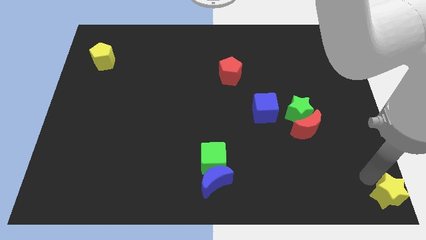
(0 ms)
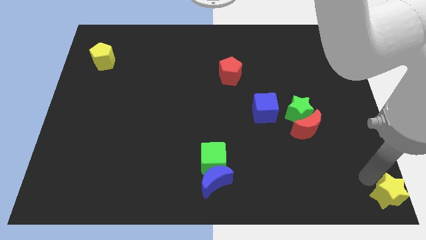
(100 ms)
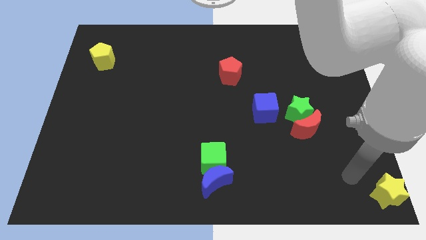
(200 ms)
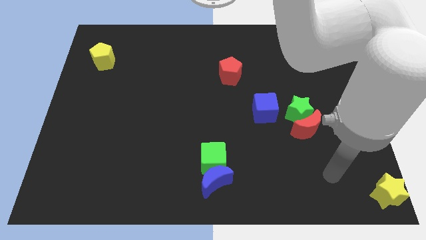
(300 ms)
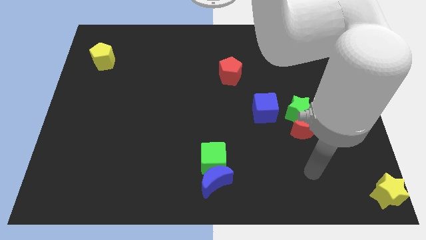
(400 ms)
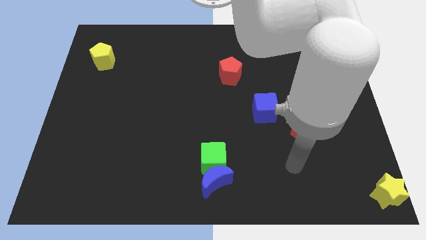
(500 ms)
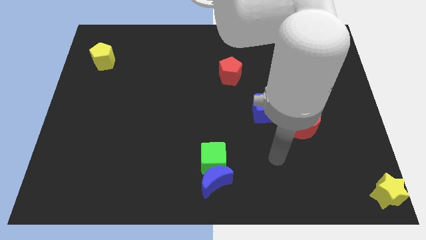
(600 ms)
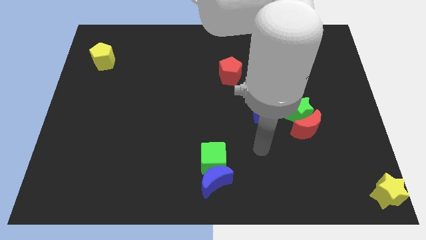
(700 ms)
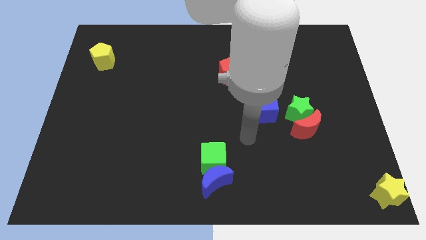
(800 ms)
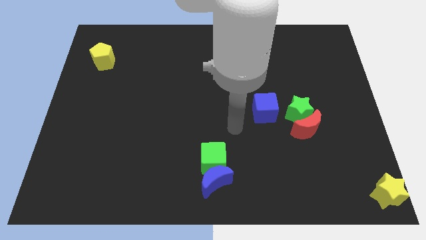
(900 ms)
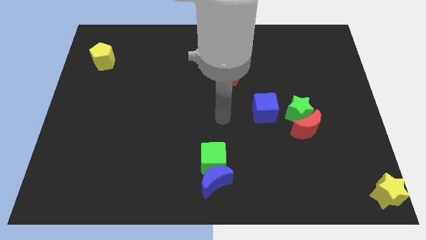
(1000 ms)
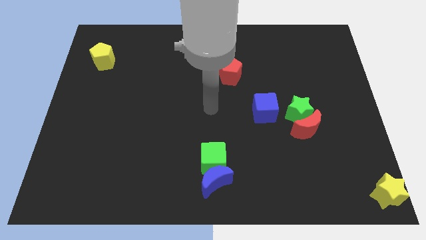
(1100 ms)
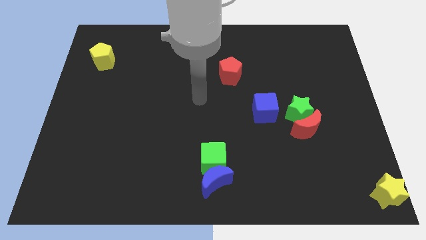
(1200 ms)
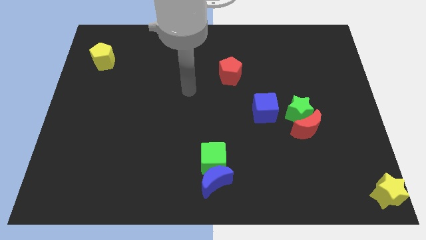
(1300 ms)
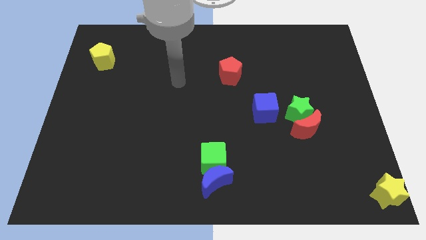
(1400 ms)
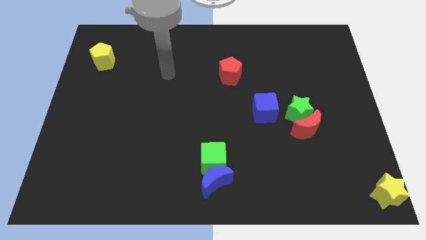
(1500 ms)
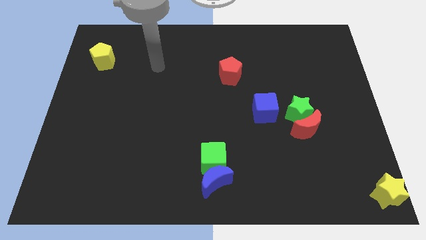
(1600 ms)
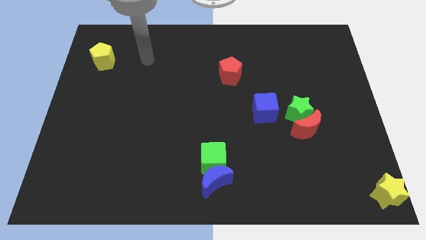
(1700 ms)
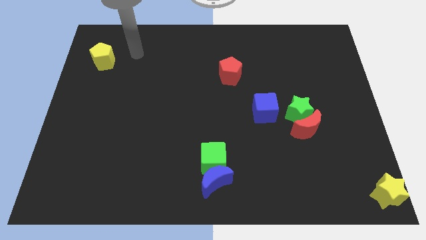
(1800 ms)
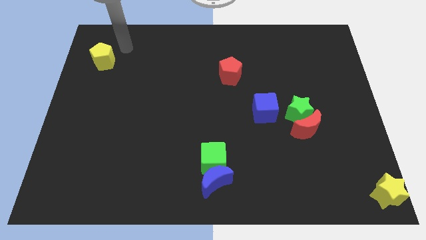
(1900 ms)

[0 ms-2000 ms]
move your arm away from the yellow star

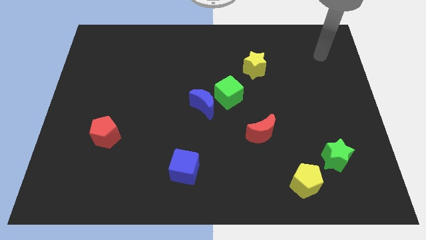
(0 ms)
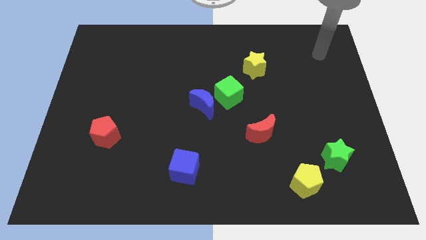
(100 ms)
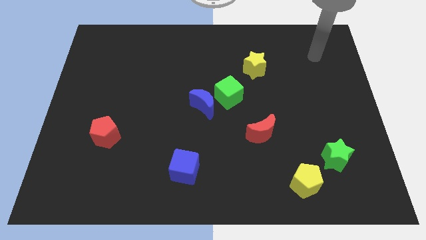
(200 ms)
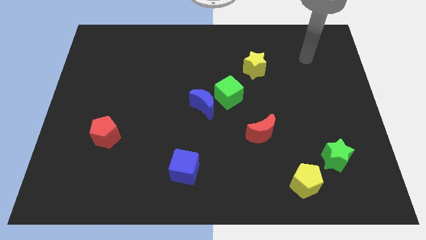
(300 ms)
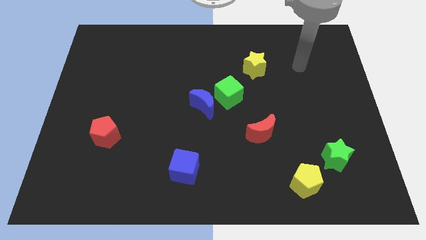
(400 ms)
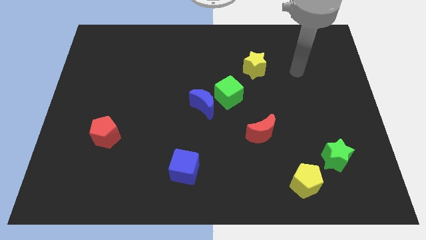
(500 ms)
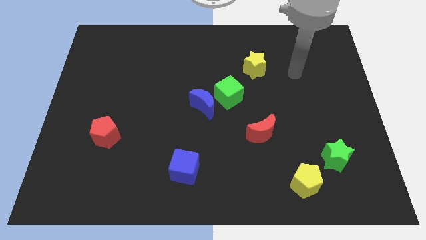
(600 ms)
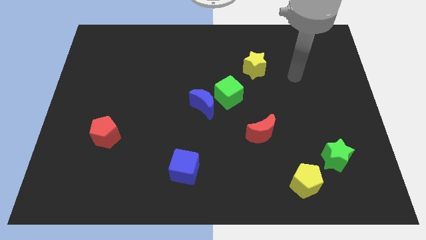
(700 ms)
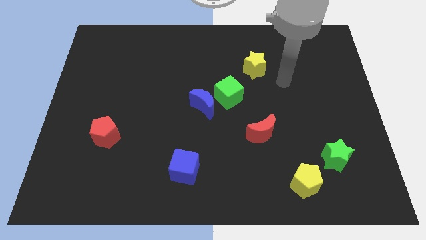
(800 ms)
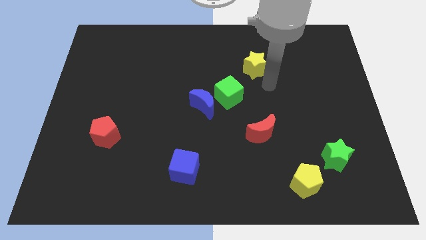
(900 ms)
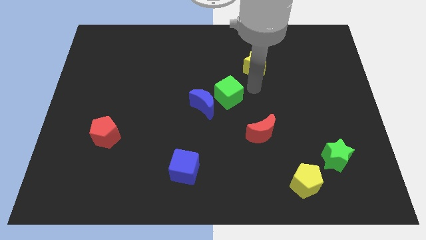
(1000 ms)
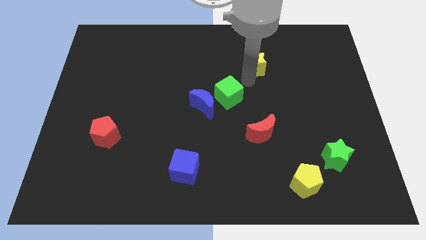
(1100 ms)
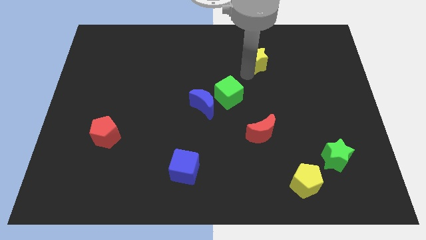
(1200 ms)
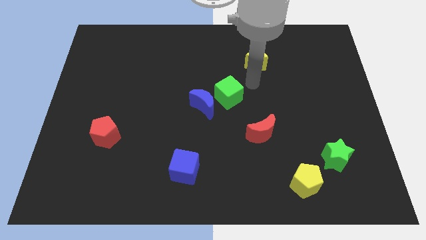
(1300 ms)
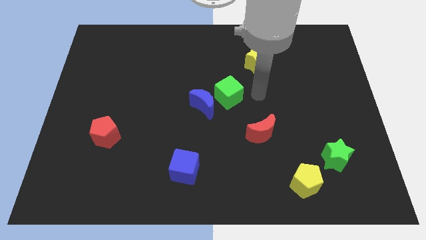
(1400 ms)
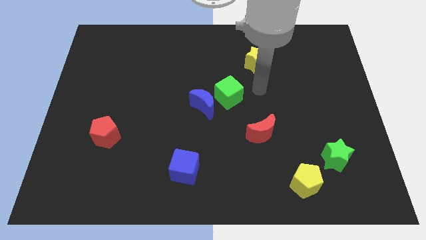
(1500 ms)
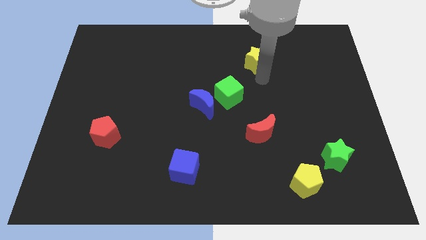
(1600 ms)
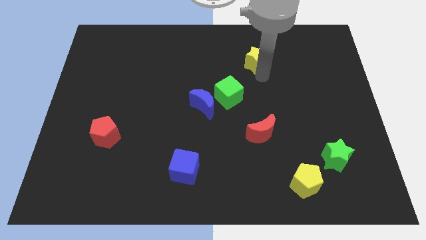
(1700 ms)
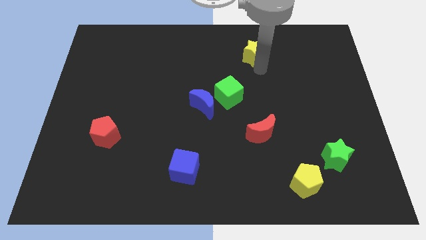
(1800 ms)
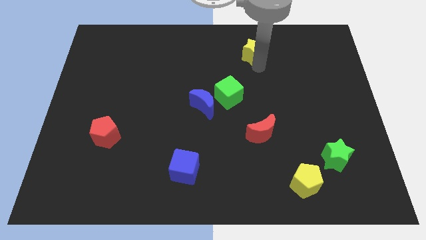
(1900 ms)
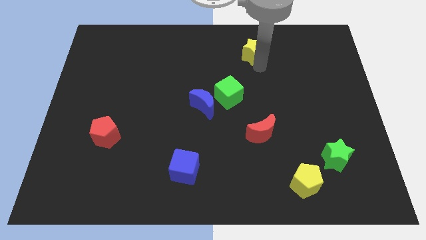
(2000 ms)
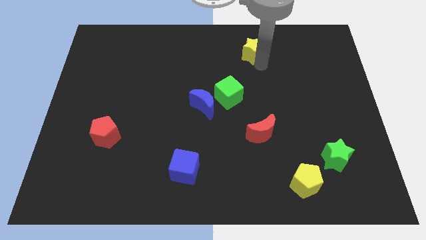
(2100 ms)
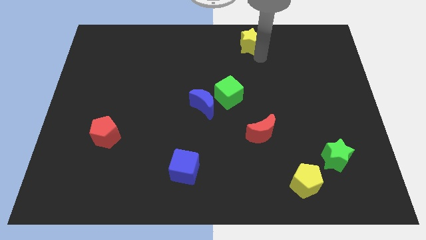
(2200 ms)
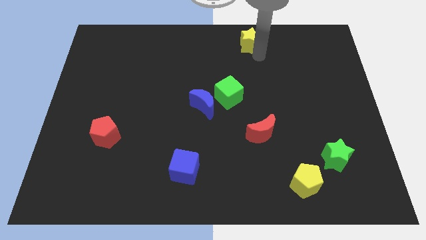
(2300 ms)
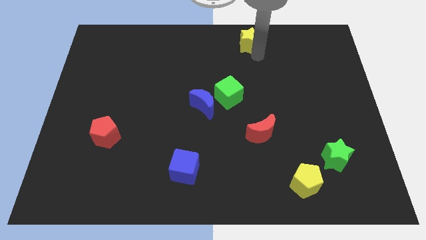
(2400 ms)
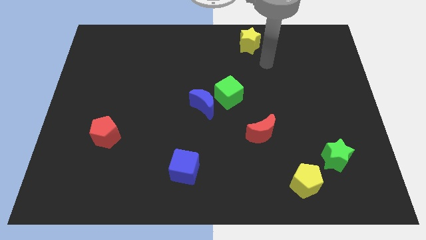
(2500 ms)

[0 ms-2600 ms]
move the yellow star to the top

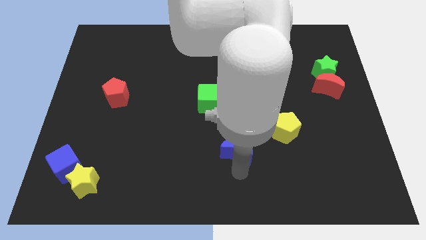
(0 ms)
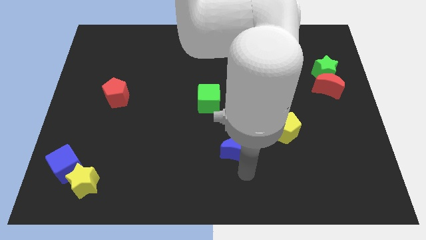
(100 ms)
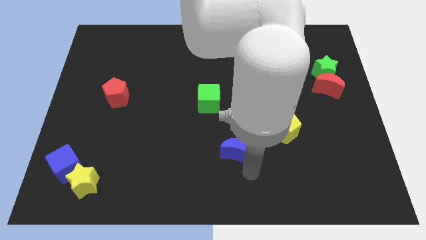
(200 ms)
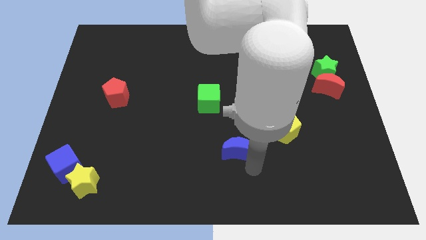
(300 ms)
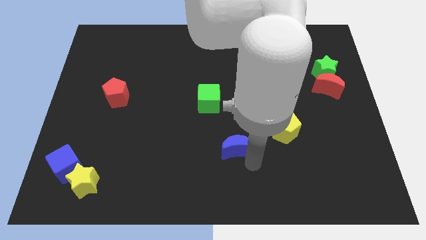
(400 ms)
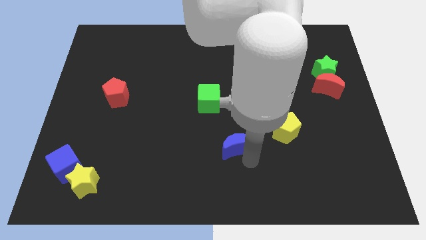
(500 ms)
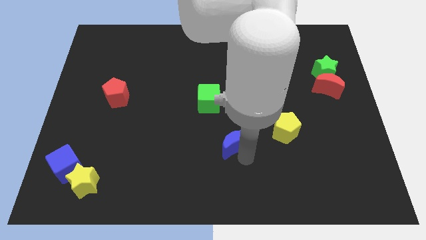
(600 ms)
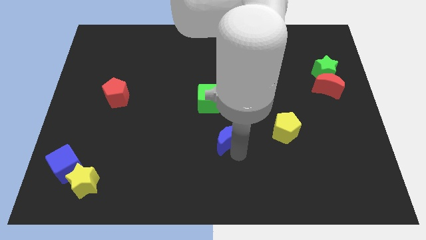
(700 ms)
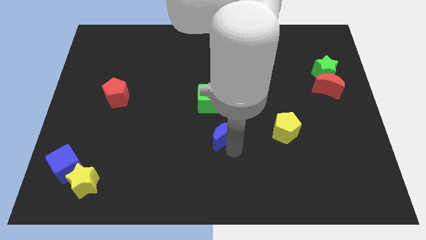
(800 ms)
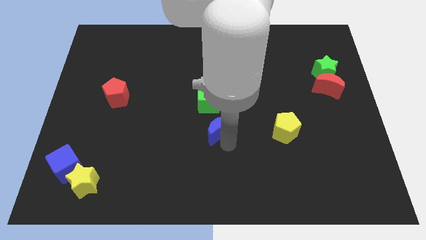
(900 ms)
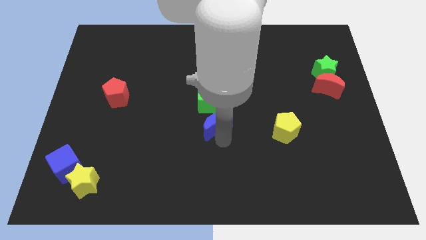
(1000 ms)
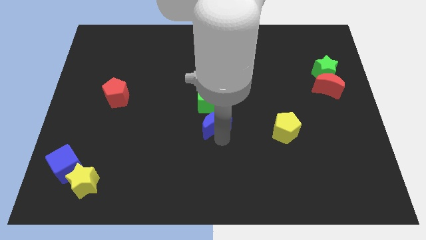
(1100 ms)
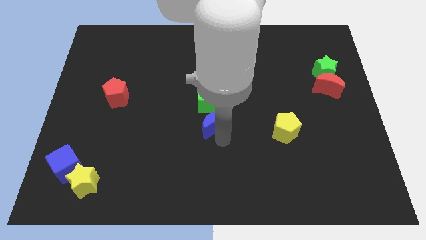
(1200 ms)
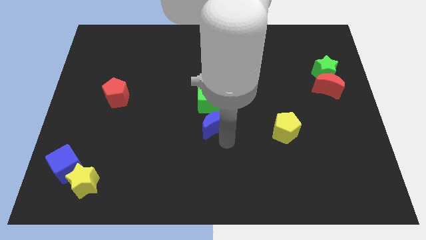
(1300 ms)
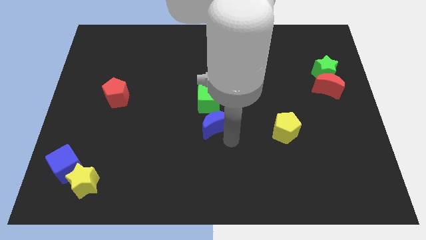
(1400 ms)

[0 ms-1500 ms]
place the blue crescent below the green star

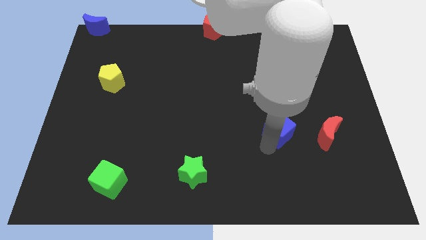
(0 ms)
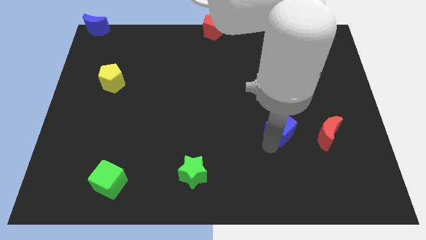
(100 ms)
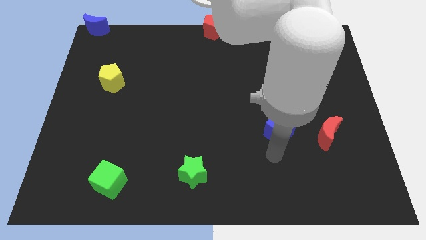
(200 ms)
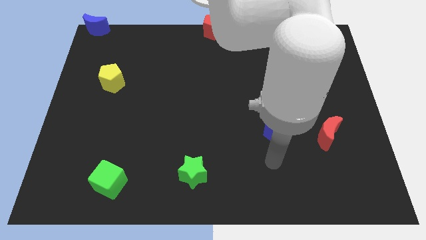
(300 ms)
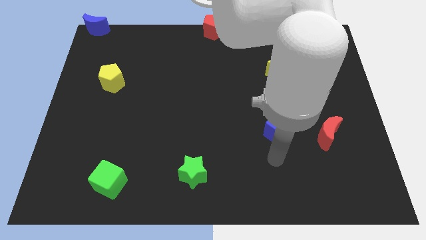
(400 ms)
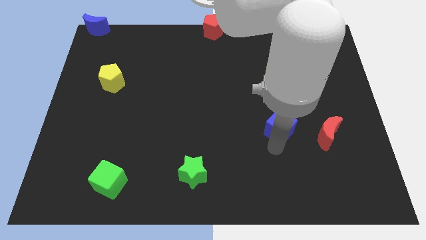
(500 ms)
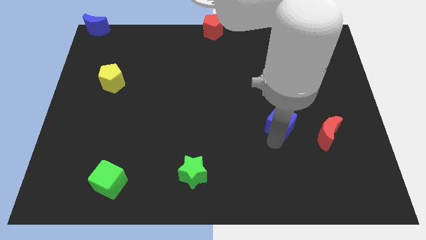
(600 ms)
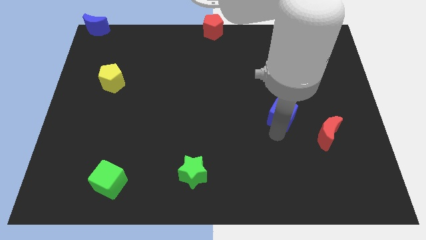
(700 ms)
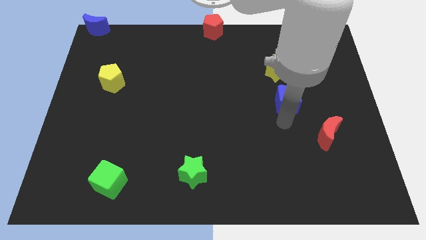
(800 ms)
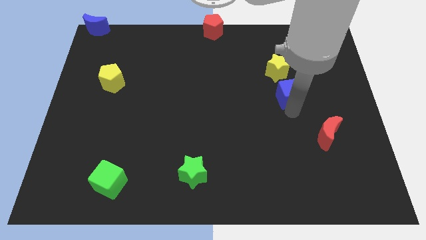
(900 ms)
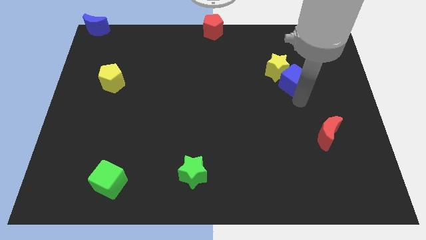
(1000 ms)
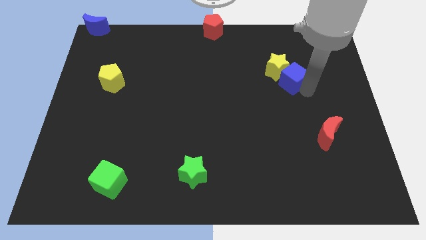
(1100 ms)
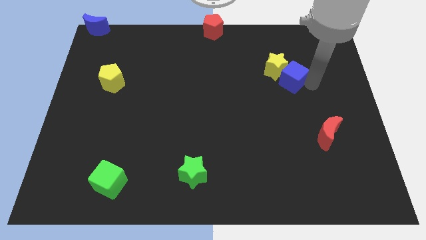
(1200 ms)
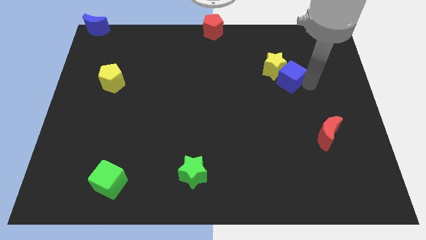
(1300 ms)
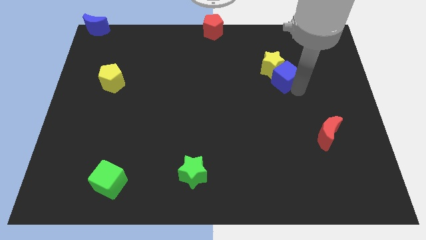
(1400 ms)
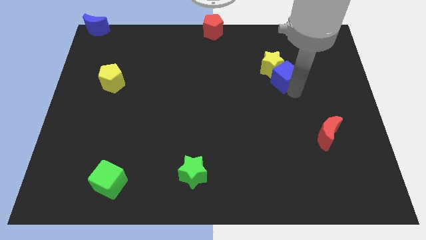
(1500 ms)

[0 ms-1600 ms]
push the blue cube into the yellow star

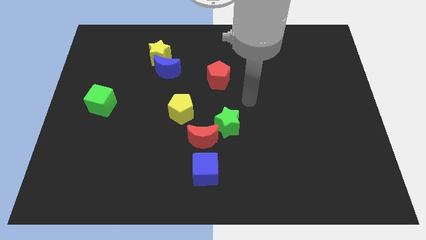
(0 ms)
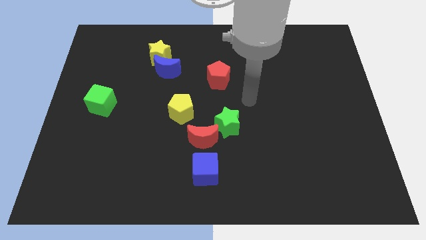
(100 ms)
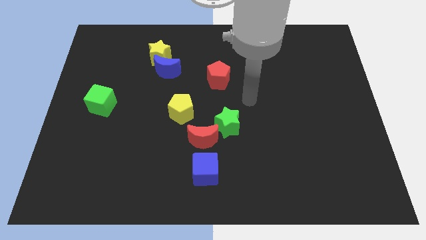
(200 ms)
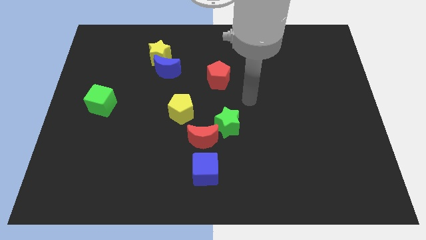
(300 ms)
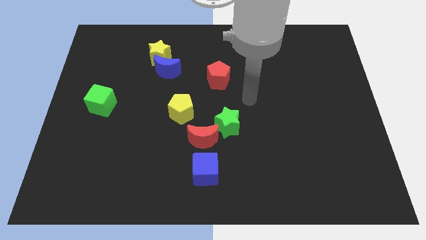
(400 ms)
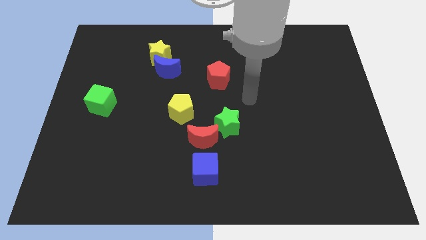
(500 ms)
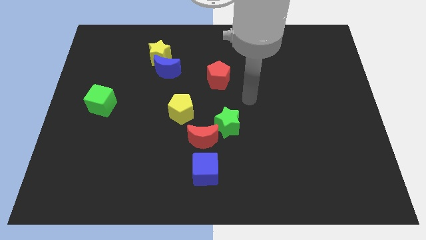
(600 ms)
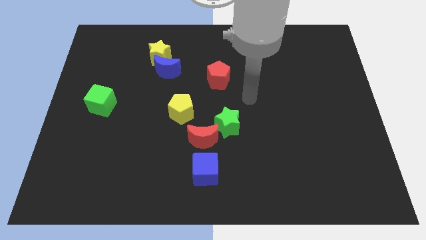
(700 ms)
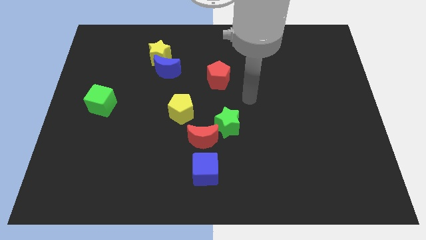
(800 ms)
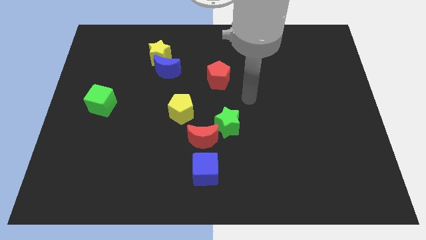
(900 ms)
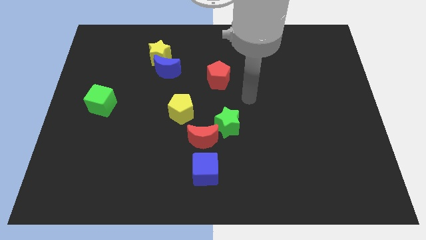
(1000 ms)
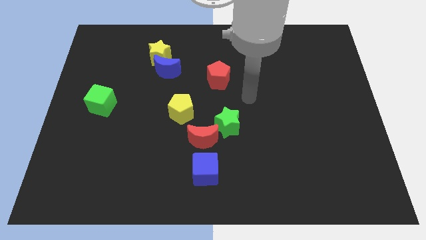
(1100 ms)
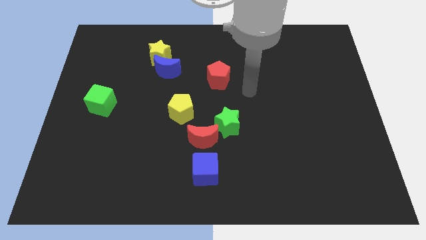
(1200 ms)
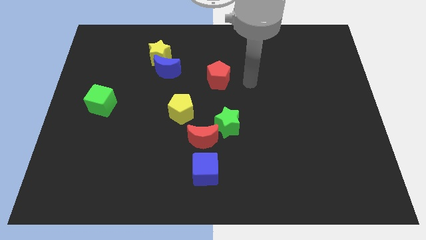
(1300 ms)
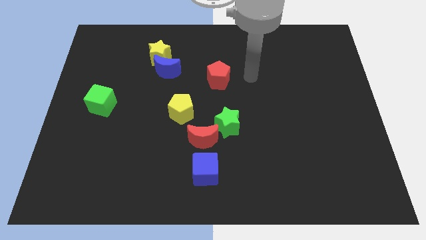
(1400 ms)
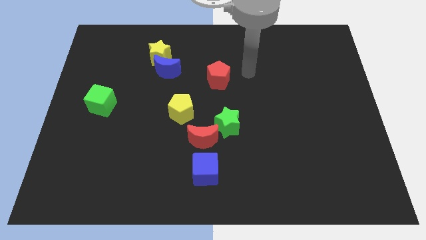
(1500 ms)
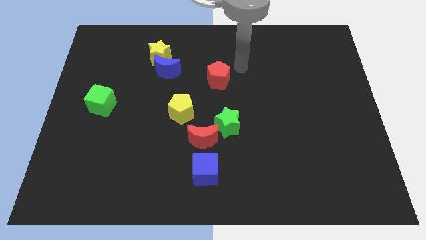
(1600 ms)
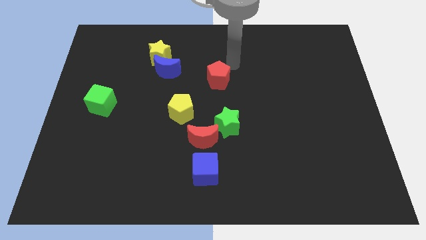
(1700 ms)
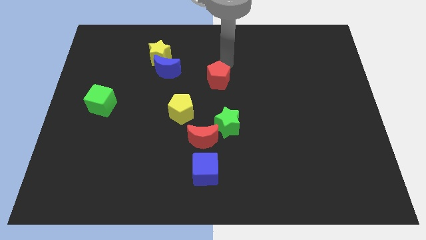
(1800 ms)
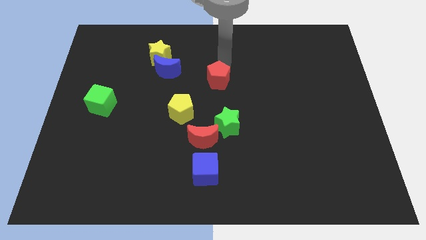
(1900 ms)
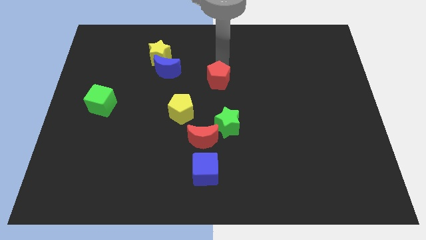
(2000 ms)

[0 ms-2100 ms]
point your arm on top of red pentagon
